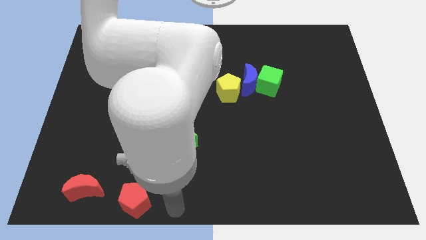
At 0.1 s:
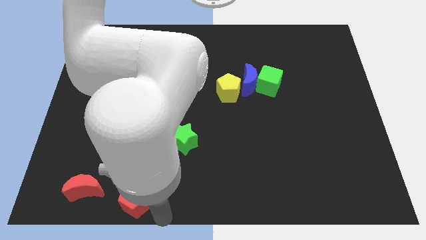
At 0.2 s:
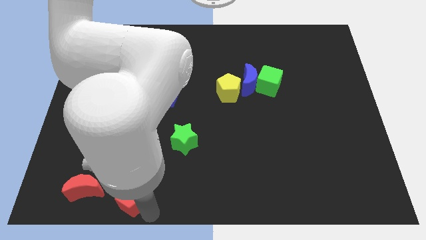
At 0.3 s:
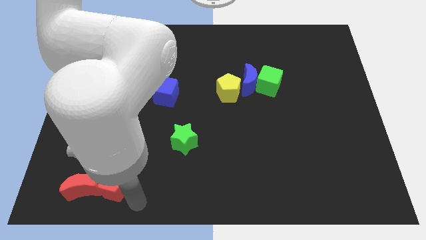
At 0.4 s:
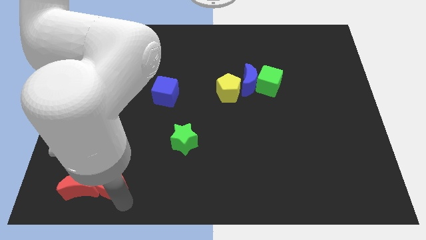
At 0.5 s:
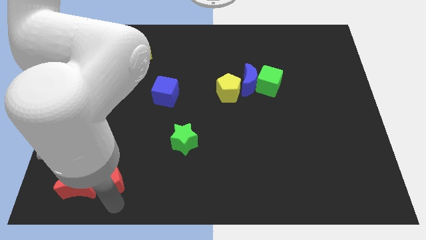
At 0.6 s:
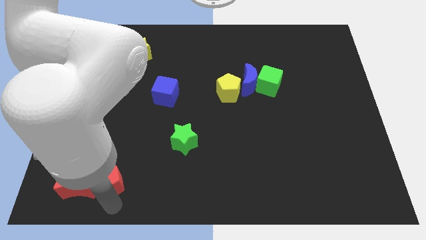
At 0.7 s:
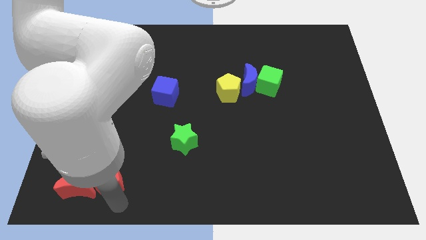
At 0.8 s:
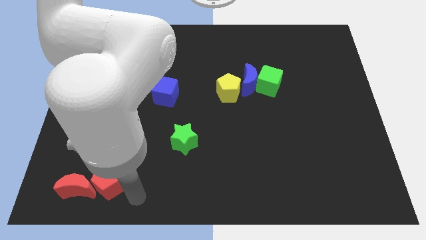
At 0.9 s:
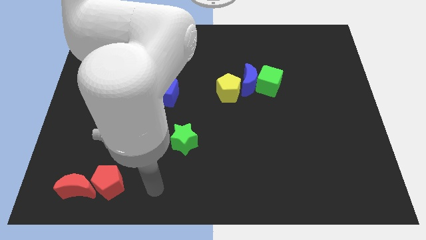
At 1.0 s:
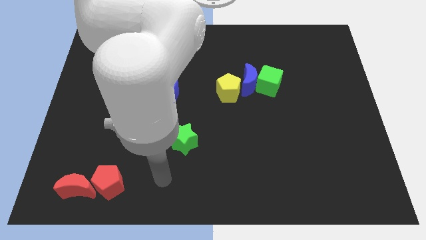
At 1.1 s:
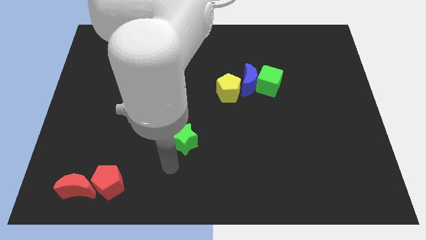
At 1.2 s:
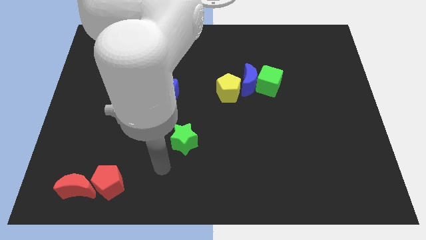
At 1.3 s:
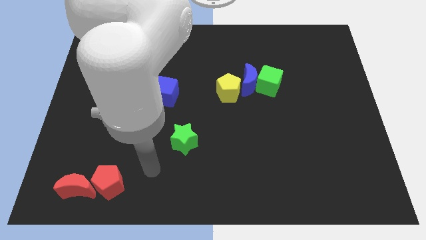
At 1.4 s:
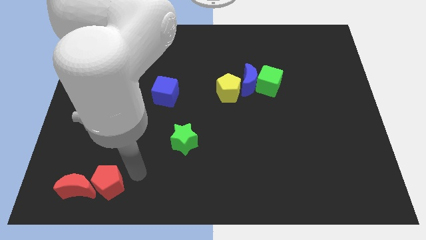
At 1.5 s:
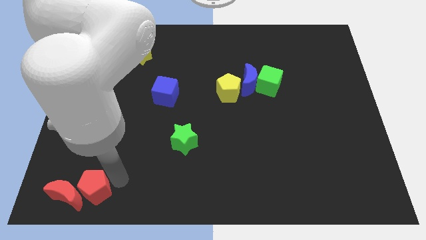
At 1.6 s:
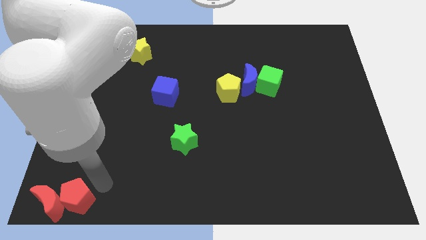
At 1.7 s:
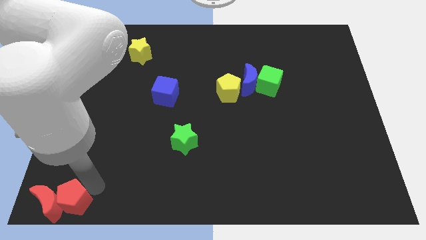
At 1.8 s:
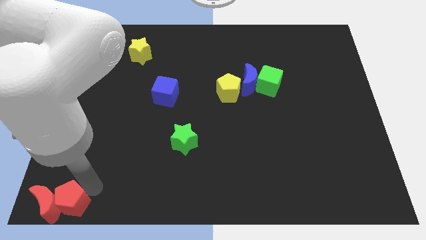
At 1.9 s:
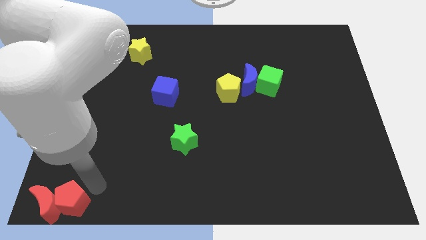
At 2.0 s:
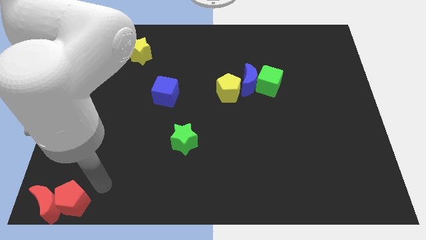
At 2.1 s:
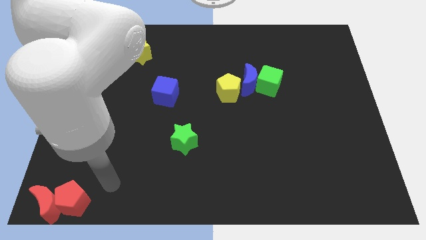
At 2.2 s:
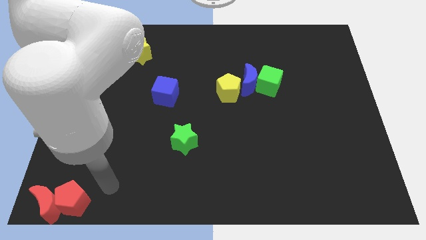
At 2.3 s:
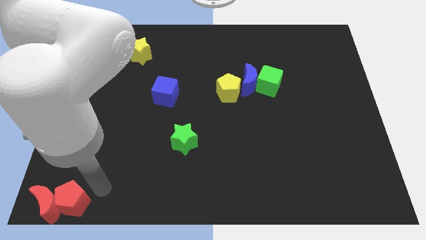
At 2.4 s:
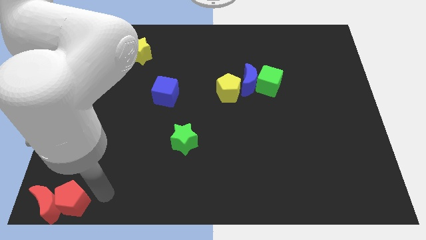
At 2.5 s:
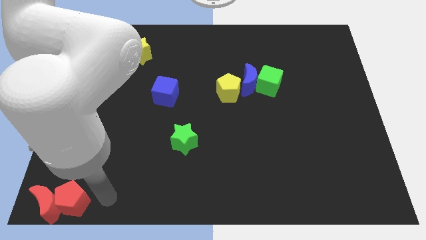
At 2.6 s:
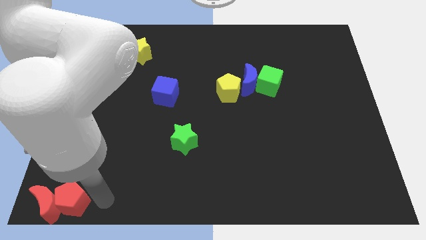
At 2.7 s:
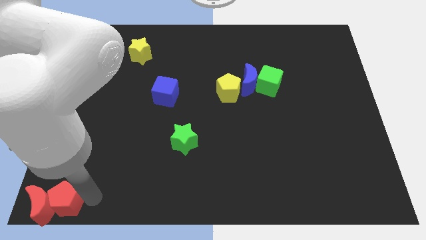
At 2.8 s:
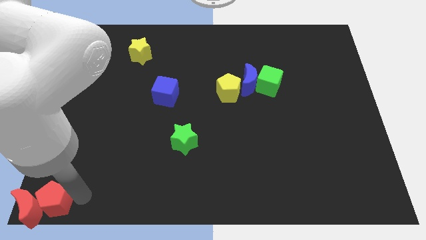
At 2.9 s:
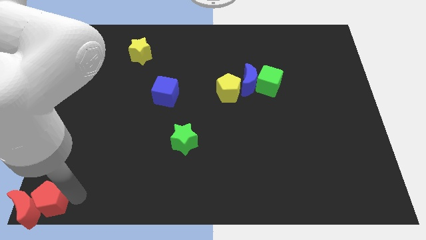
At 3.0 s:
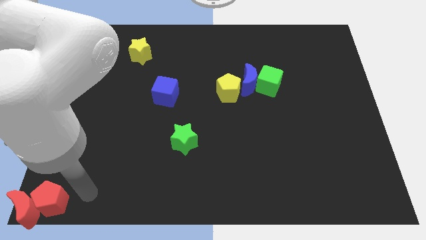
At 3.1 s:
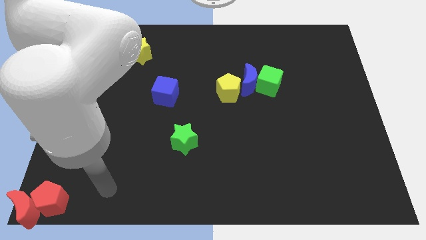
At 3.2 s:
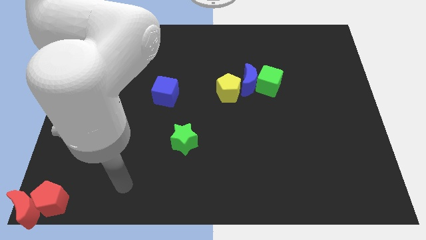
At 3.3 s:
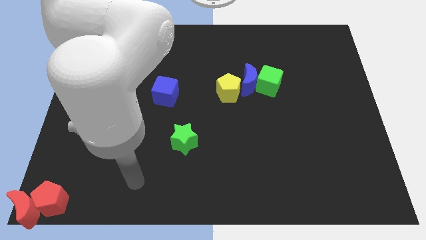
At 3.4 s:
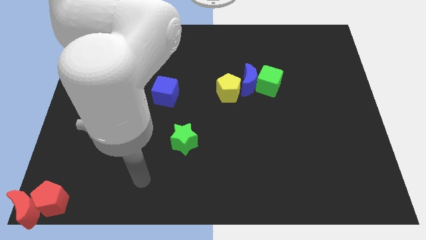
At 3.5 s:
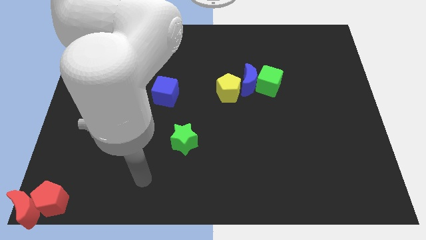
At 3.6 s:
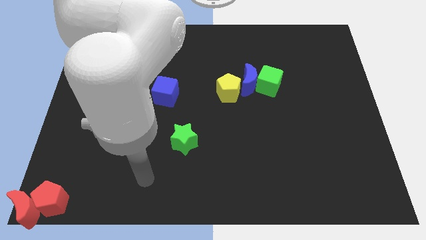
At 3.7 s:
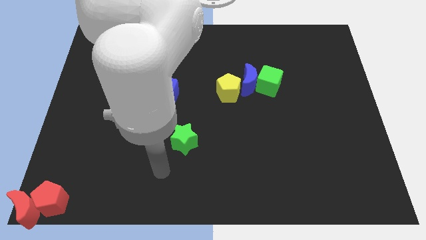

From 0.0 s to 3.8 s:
push the red pentagon towards the extreme bottom left of the board along with red crescent

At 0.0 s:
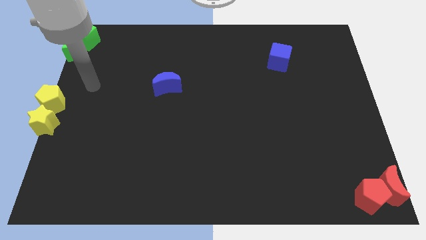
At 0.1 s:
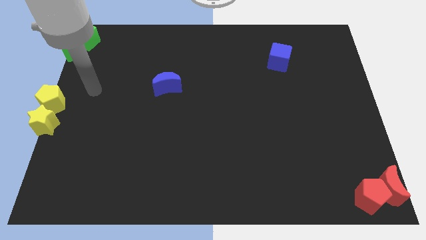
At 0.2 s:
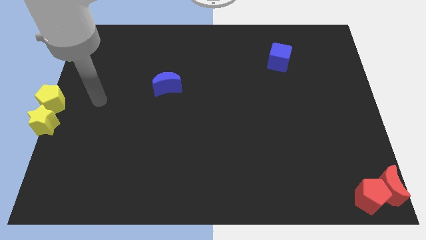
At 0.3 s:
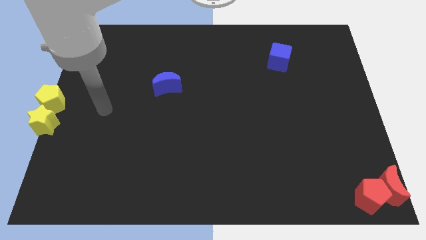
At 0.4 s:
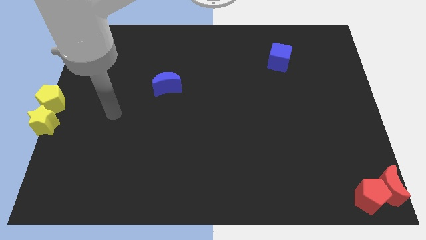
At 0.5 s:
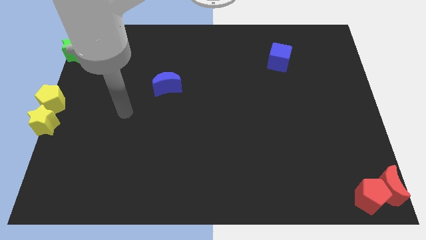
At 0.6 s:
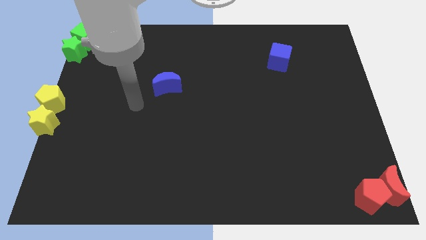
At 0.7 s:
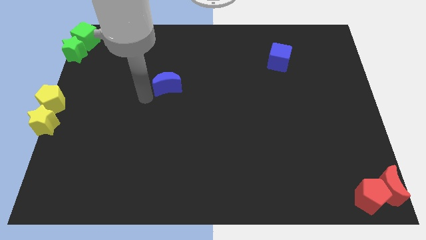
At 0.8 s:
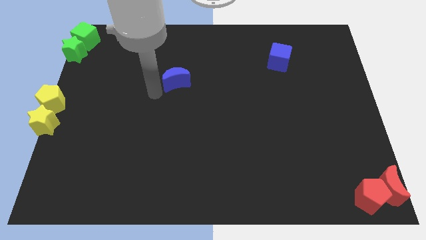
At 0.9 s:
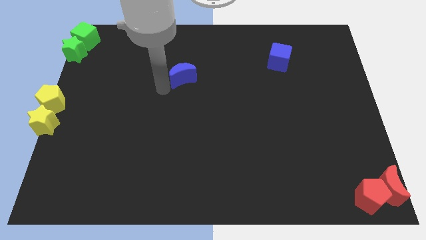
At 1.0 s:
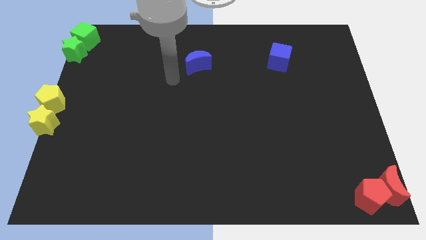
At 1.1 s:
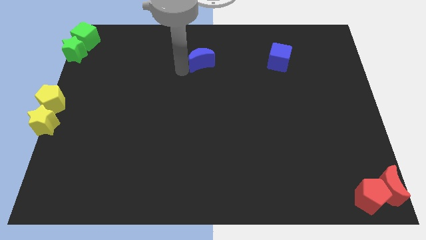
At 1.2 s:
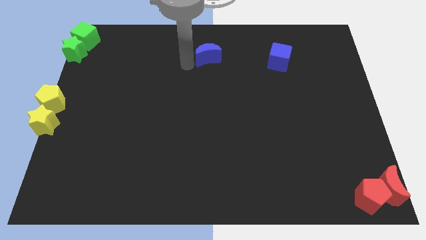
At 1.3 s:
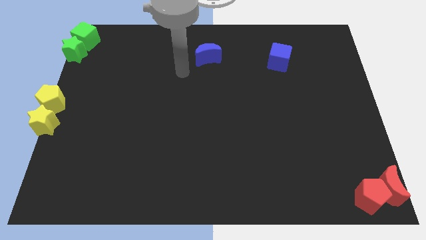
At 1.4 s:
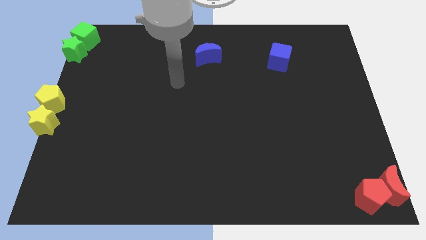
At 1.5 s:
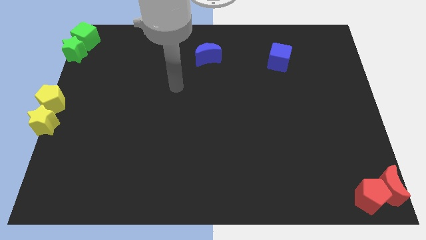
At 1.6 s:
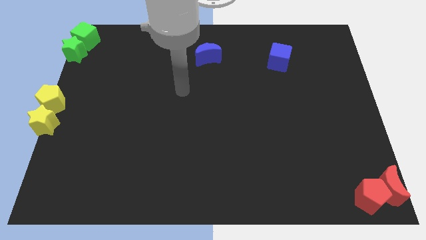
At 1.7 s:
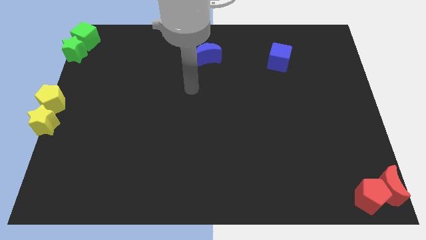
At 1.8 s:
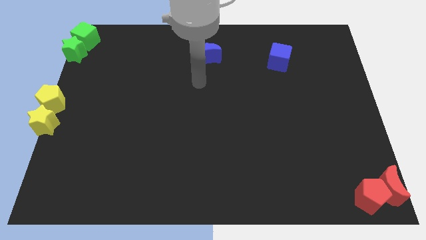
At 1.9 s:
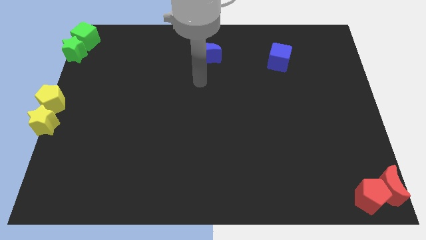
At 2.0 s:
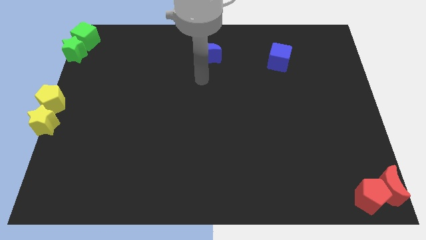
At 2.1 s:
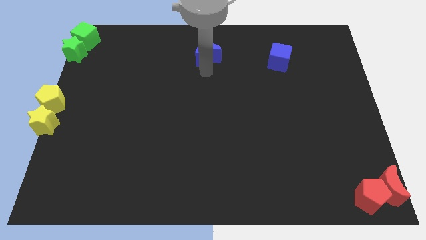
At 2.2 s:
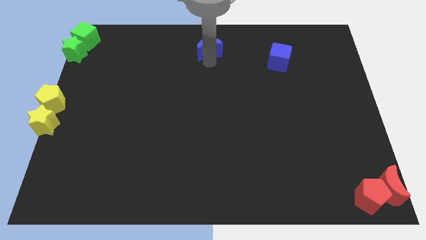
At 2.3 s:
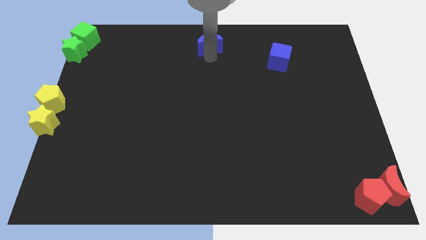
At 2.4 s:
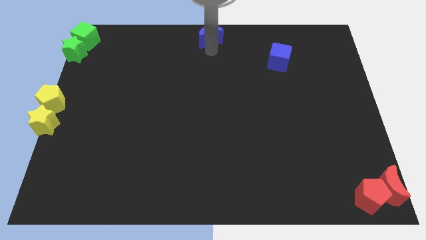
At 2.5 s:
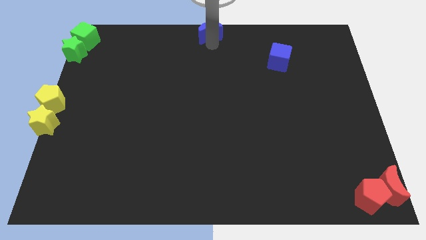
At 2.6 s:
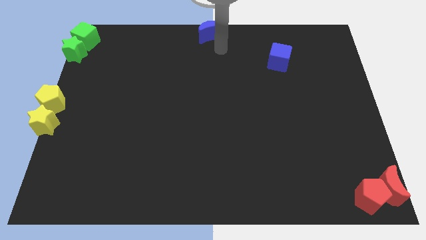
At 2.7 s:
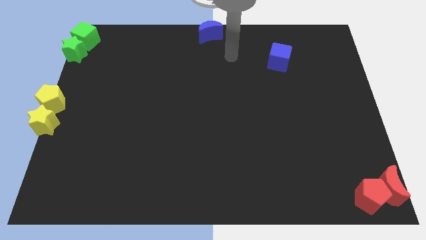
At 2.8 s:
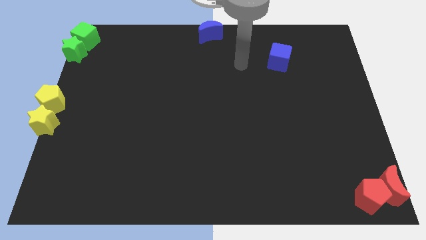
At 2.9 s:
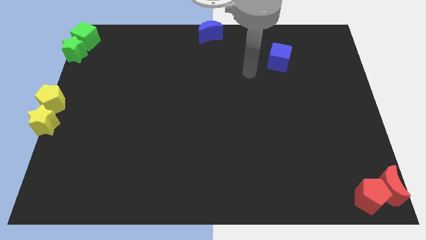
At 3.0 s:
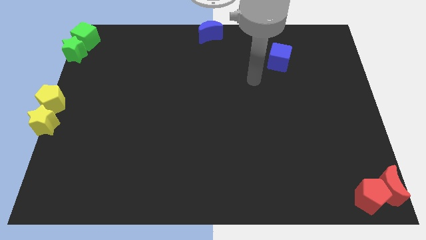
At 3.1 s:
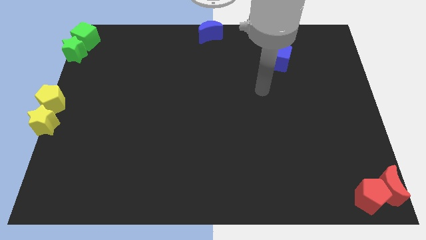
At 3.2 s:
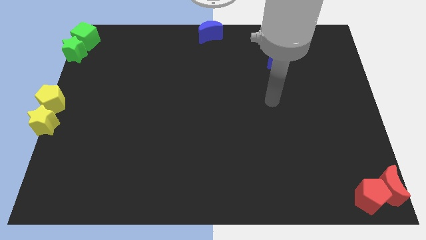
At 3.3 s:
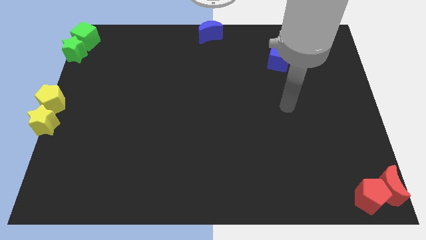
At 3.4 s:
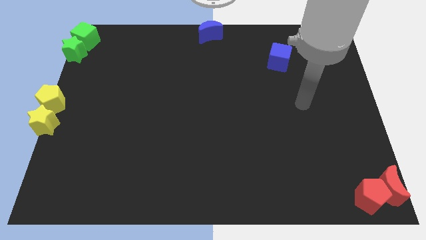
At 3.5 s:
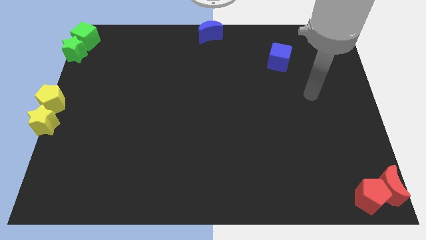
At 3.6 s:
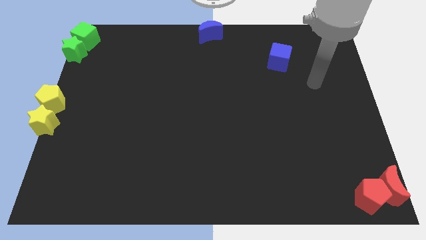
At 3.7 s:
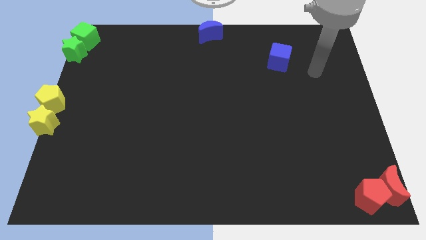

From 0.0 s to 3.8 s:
move blue moon to the top center

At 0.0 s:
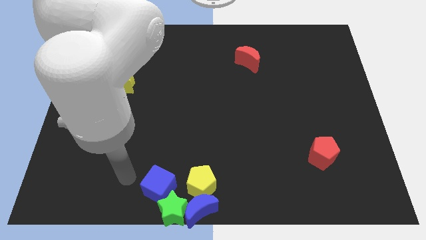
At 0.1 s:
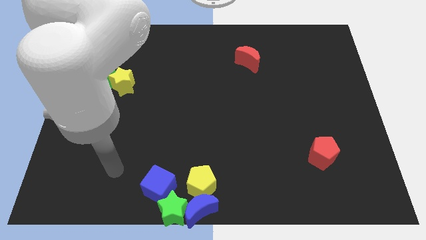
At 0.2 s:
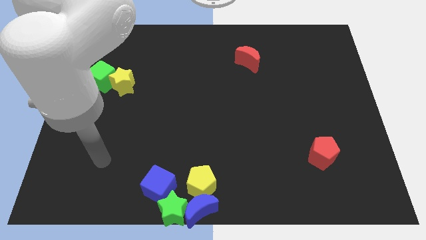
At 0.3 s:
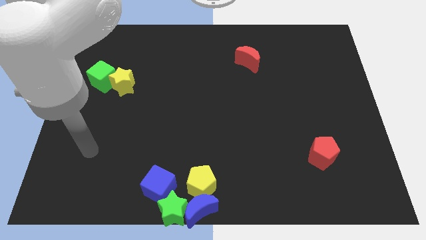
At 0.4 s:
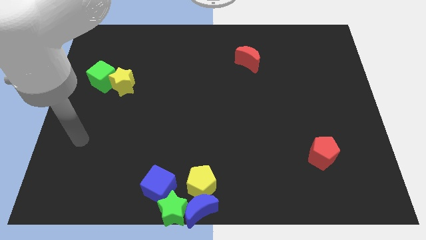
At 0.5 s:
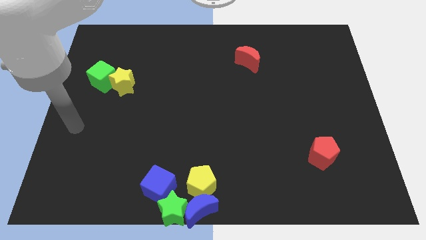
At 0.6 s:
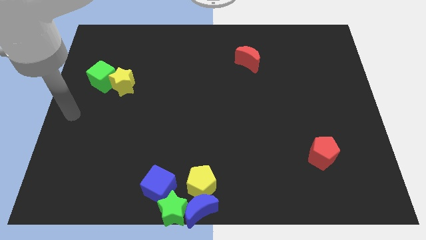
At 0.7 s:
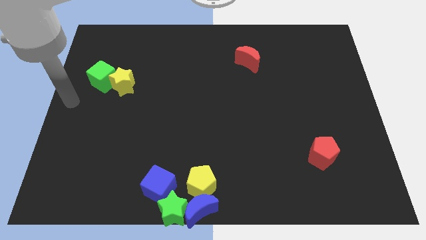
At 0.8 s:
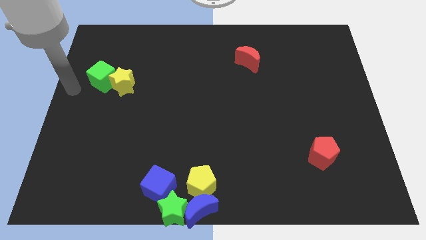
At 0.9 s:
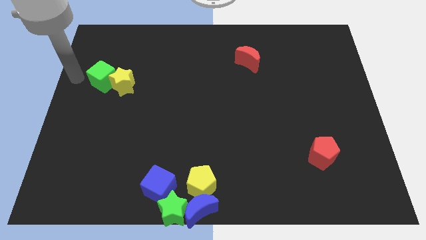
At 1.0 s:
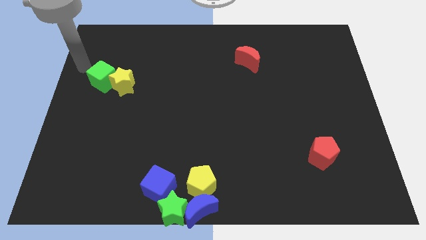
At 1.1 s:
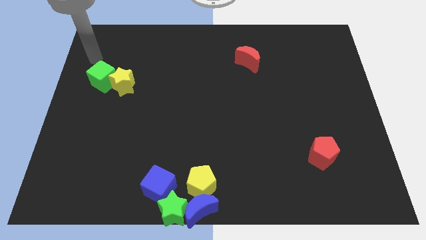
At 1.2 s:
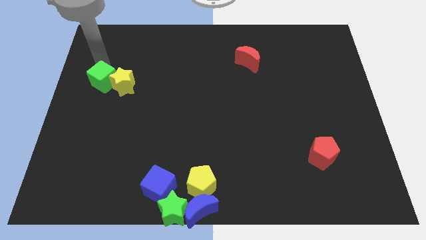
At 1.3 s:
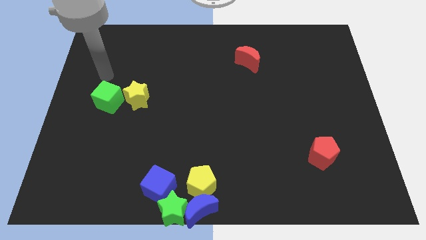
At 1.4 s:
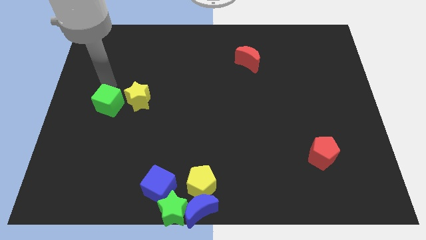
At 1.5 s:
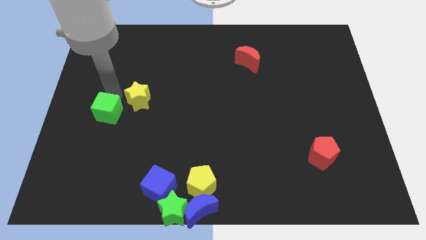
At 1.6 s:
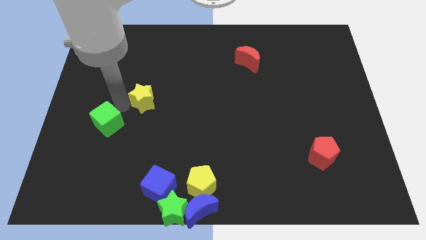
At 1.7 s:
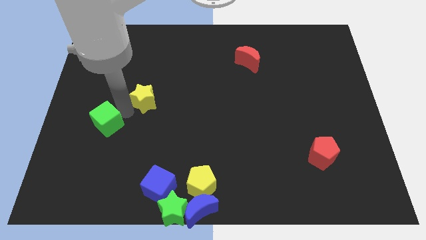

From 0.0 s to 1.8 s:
separate the green cube and the yellow star
